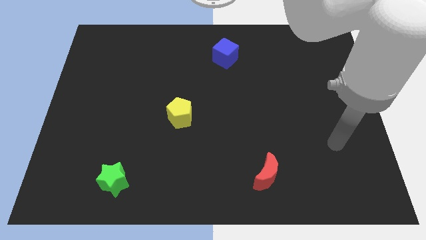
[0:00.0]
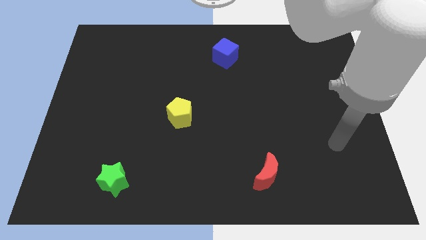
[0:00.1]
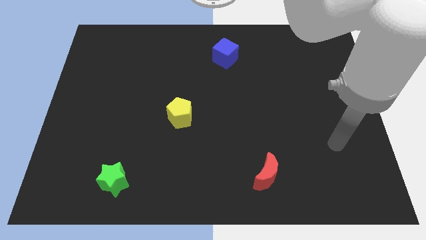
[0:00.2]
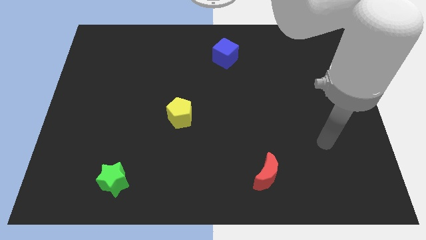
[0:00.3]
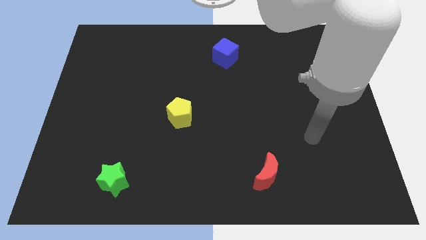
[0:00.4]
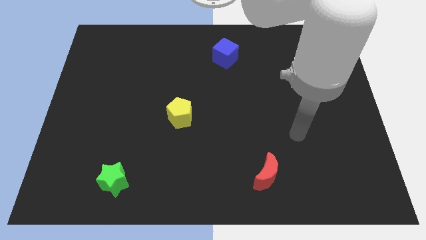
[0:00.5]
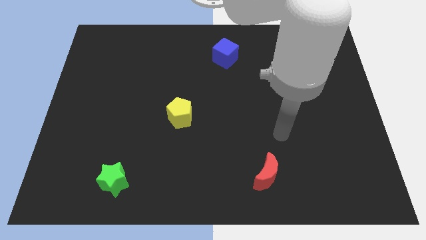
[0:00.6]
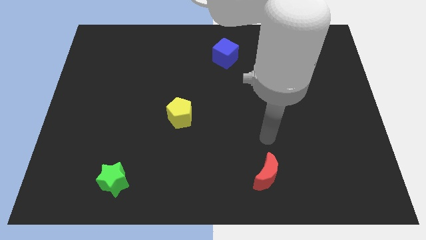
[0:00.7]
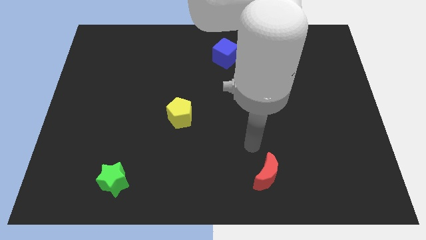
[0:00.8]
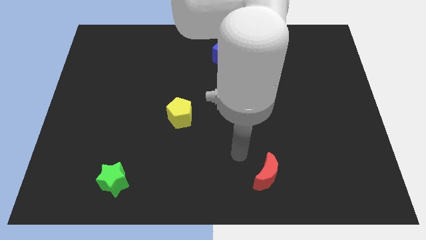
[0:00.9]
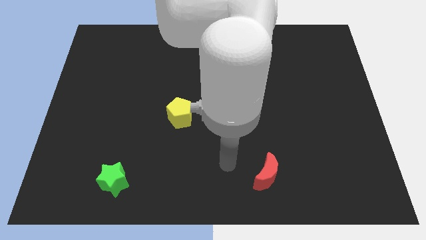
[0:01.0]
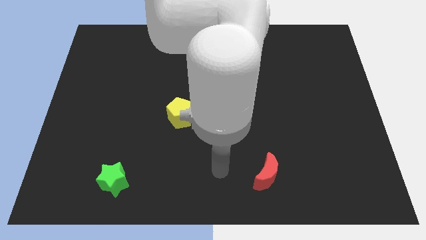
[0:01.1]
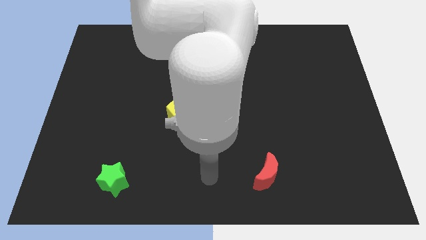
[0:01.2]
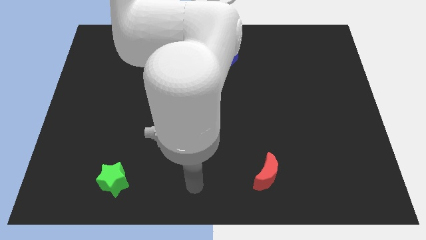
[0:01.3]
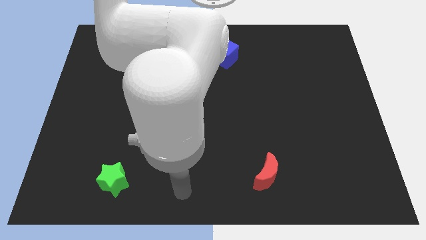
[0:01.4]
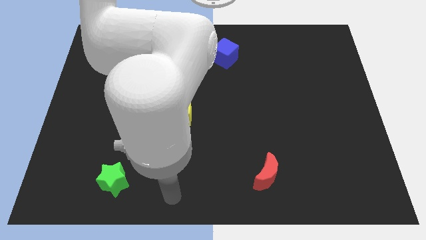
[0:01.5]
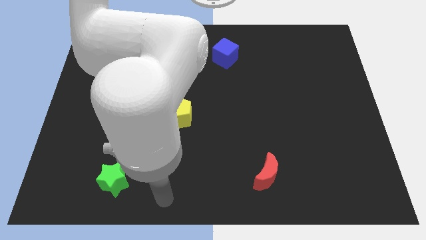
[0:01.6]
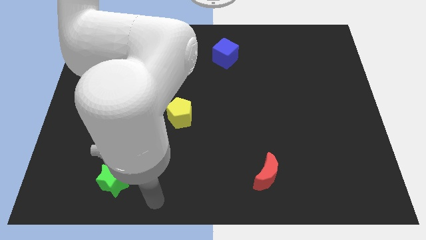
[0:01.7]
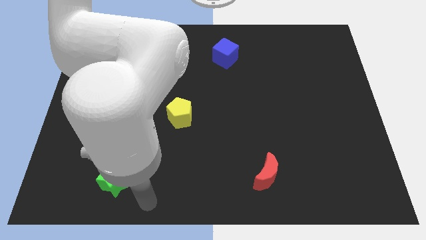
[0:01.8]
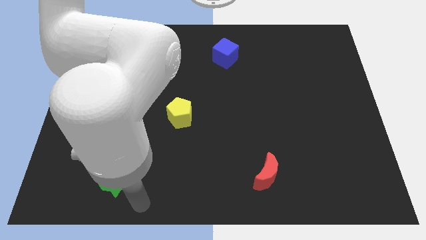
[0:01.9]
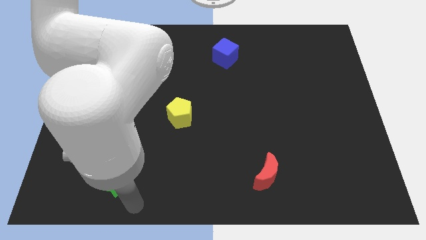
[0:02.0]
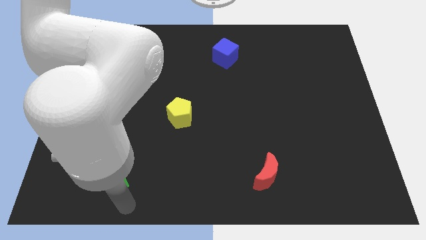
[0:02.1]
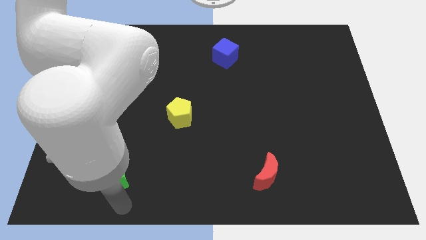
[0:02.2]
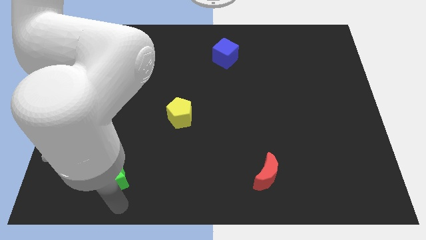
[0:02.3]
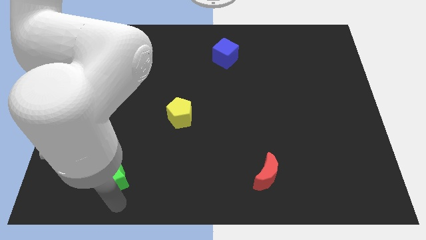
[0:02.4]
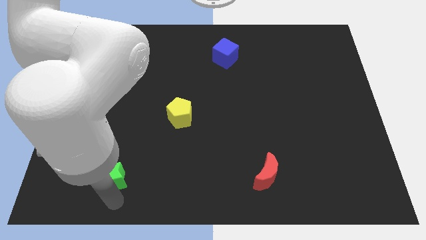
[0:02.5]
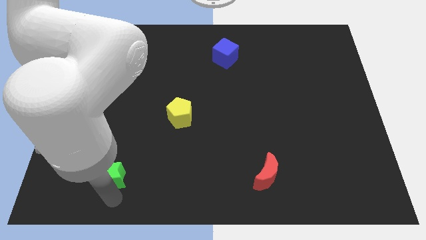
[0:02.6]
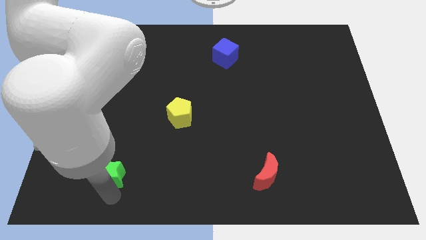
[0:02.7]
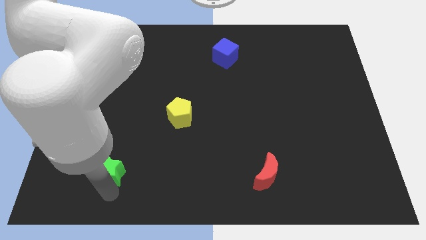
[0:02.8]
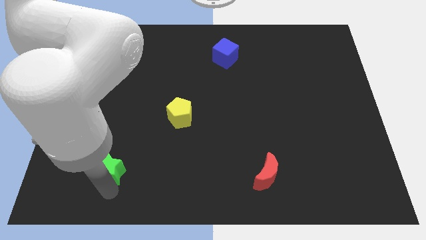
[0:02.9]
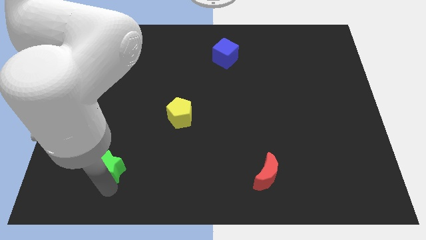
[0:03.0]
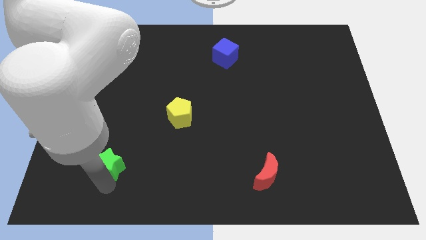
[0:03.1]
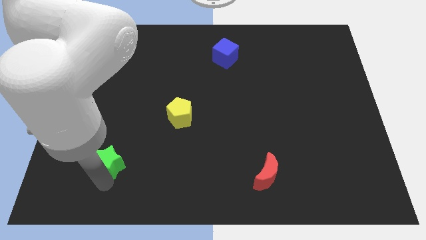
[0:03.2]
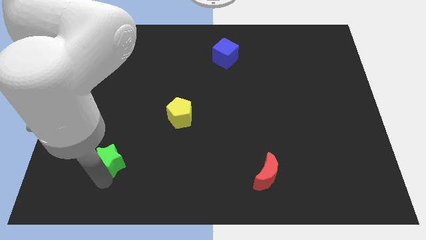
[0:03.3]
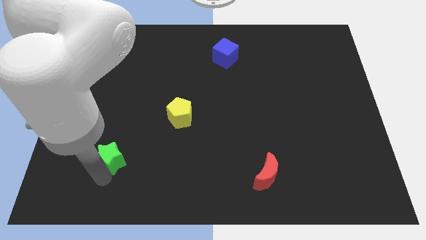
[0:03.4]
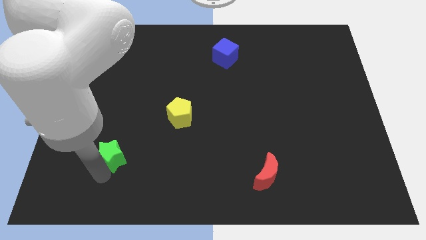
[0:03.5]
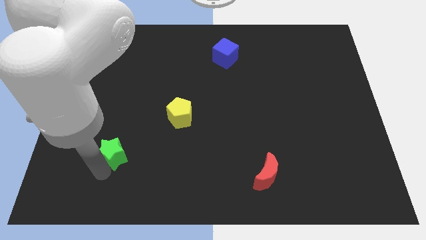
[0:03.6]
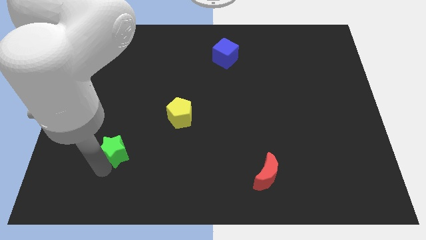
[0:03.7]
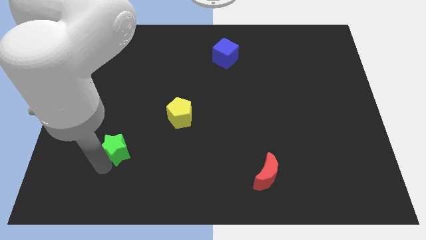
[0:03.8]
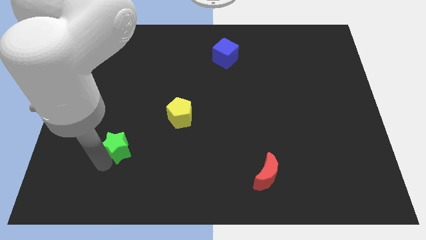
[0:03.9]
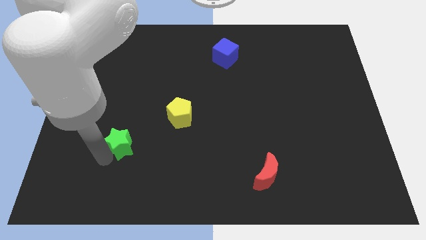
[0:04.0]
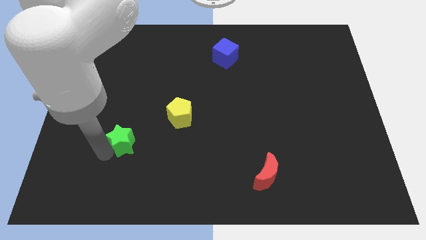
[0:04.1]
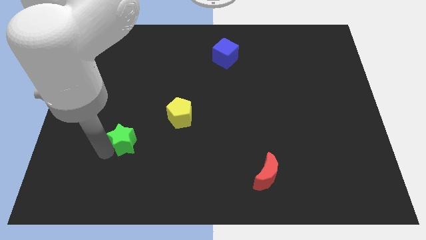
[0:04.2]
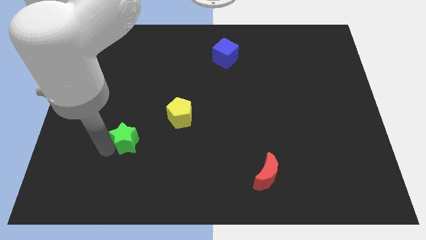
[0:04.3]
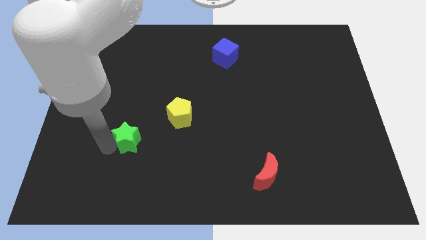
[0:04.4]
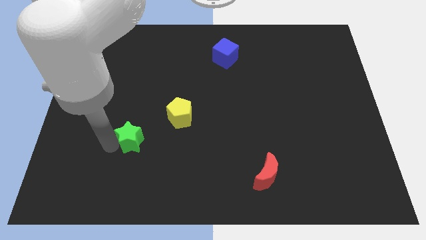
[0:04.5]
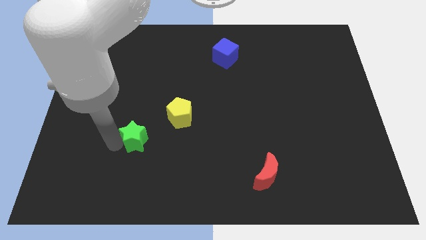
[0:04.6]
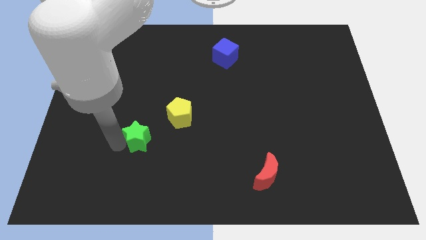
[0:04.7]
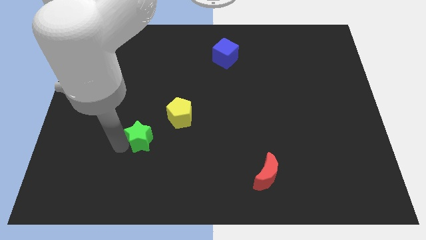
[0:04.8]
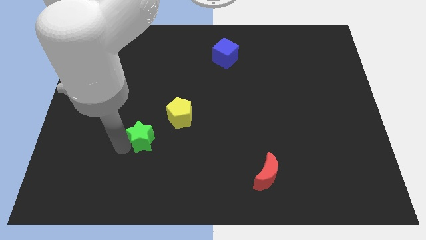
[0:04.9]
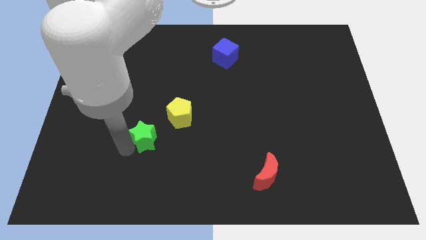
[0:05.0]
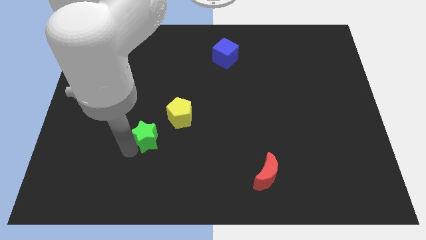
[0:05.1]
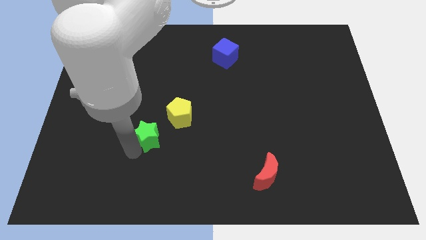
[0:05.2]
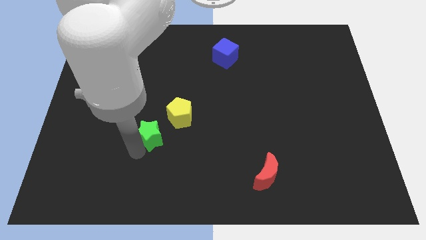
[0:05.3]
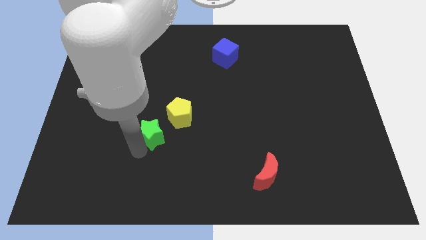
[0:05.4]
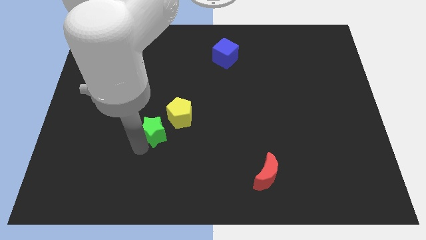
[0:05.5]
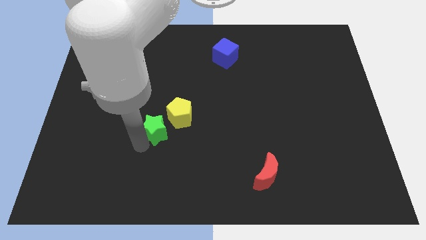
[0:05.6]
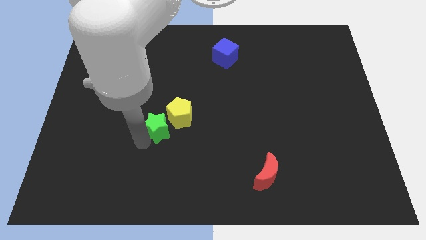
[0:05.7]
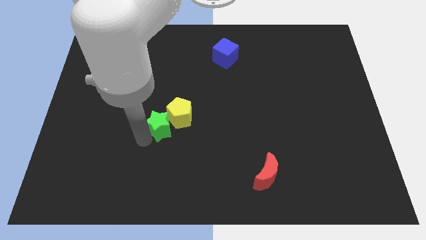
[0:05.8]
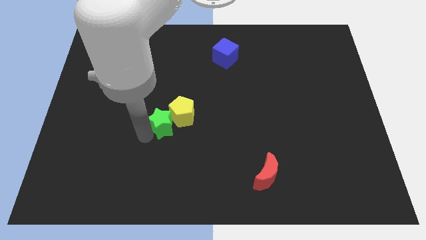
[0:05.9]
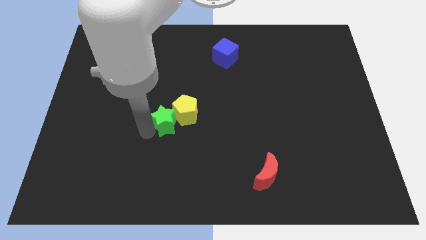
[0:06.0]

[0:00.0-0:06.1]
put the green star close to the yellow pentagon

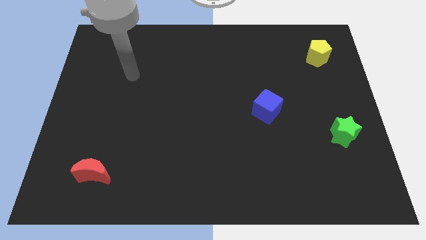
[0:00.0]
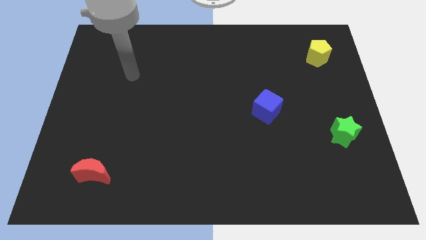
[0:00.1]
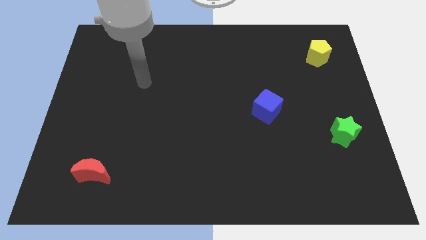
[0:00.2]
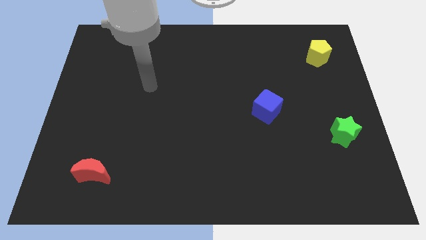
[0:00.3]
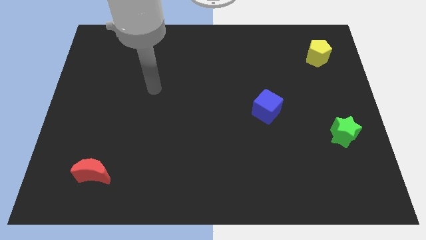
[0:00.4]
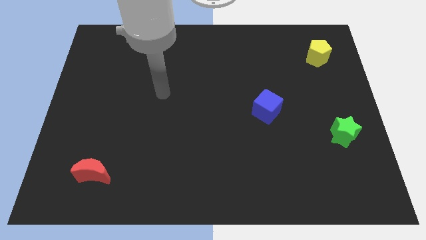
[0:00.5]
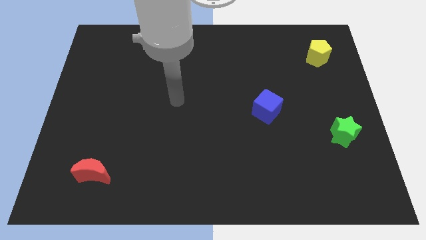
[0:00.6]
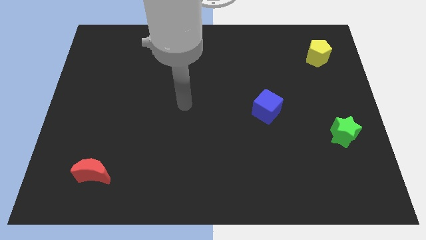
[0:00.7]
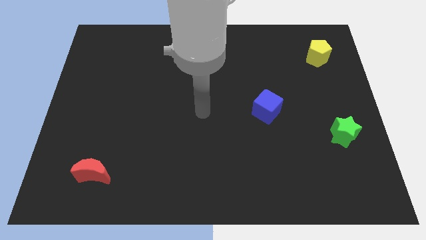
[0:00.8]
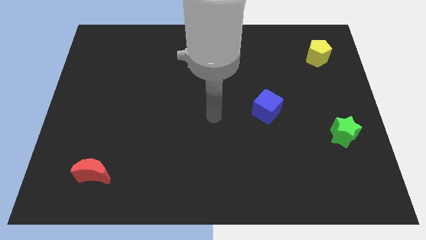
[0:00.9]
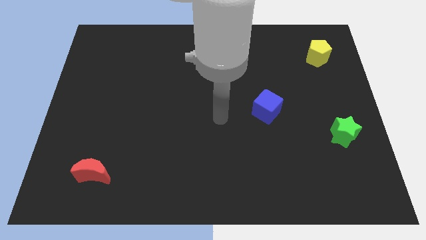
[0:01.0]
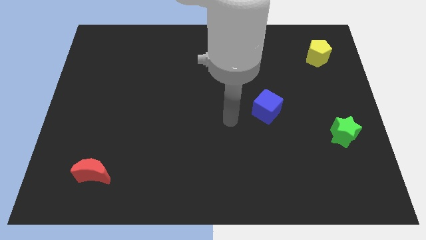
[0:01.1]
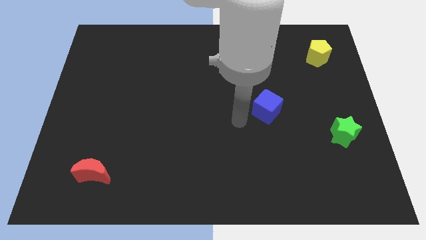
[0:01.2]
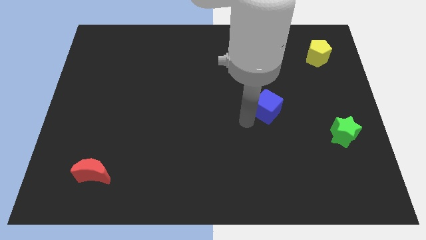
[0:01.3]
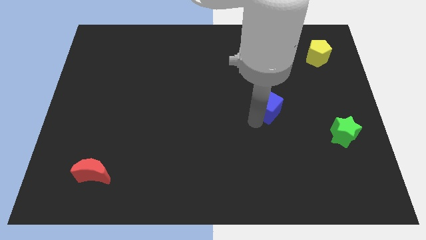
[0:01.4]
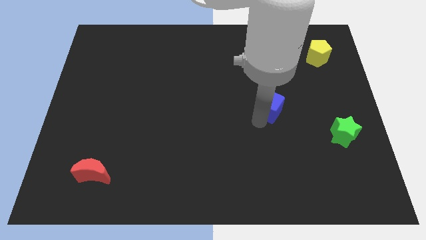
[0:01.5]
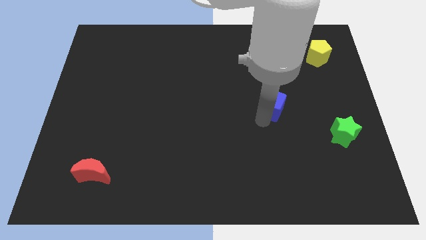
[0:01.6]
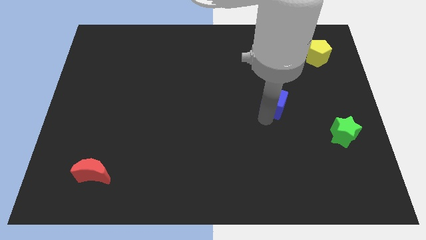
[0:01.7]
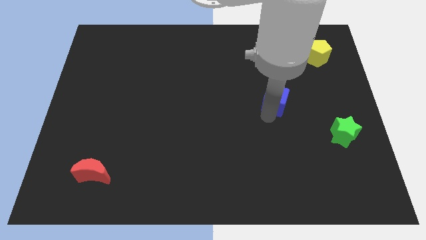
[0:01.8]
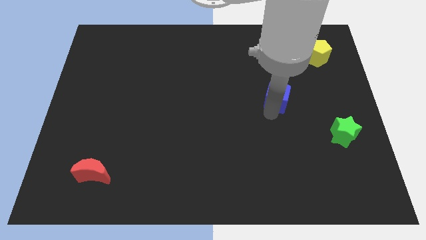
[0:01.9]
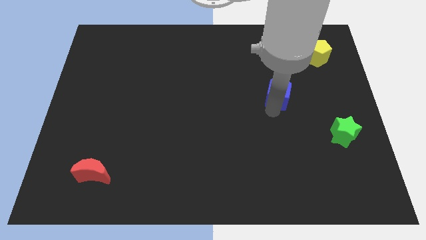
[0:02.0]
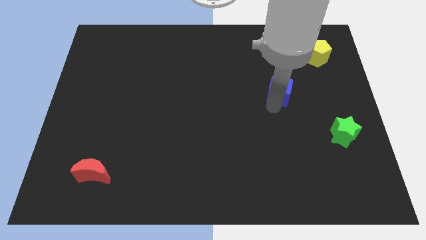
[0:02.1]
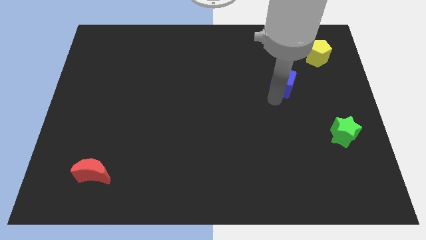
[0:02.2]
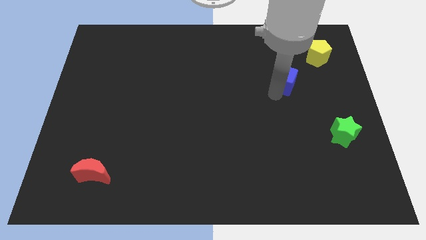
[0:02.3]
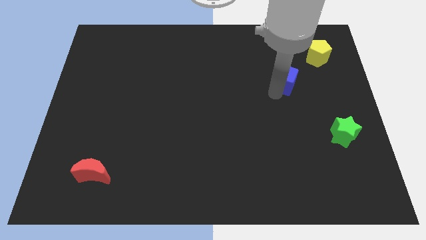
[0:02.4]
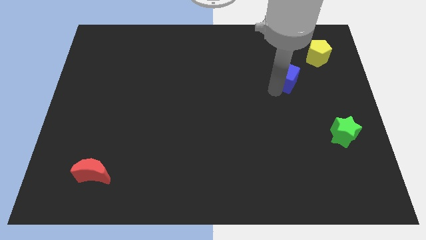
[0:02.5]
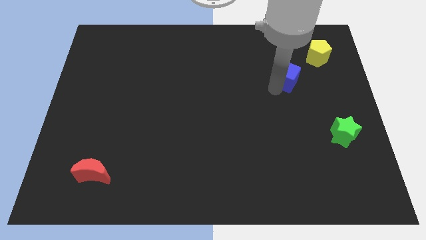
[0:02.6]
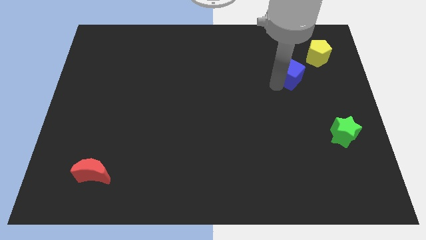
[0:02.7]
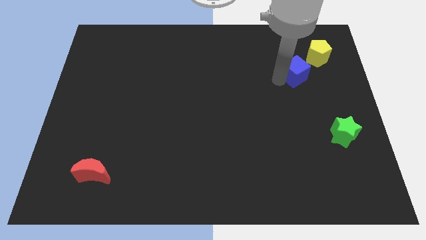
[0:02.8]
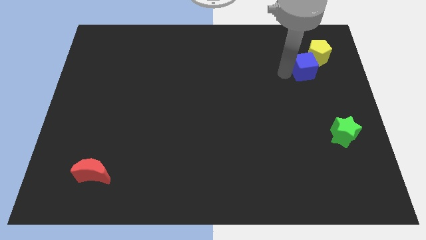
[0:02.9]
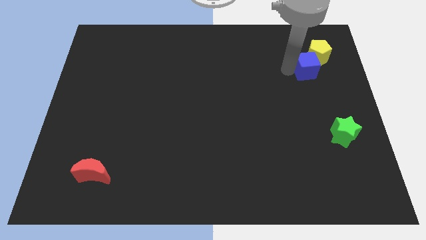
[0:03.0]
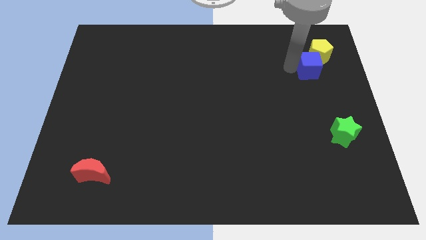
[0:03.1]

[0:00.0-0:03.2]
slide the blue cube next to the pentagon
